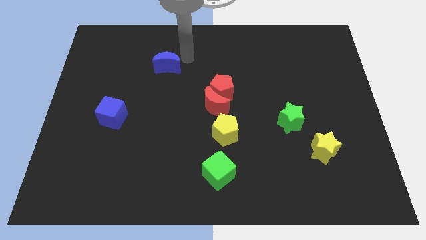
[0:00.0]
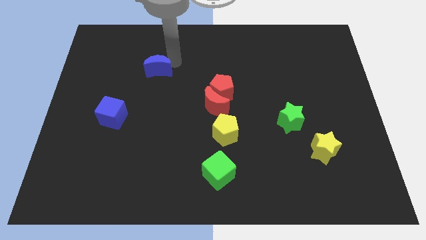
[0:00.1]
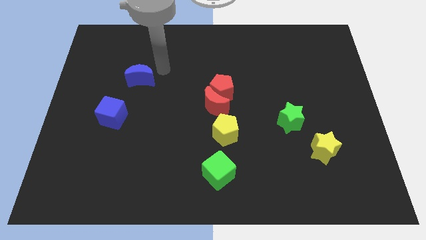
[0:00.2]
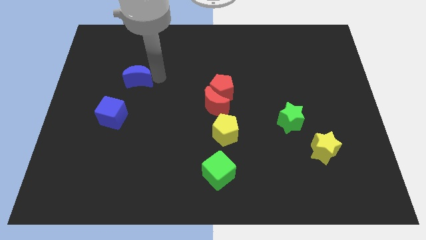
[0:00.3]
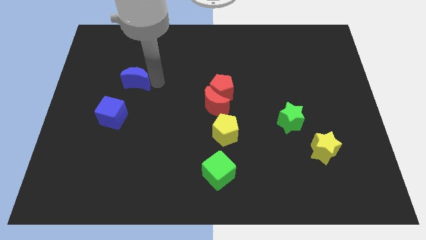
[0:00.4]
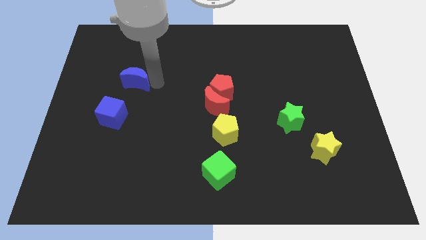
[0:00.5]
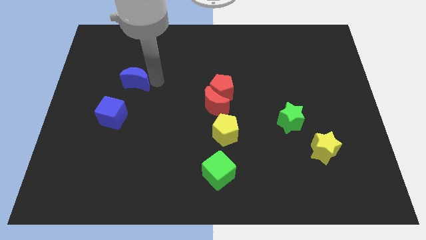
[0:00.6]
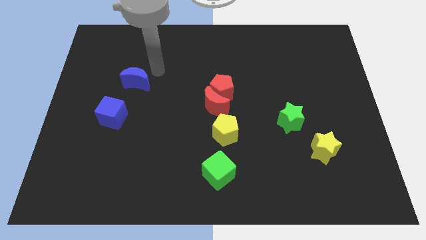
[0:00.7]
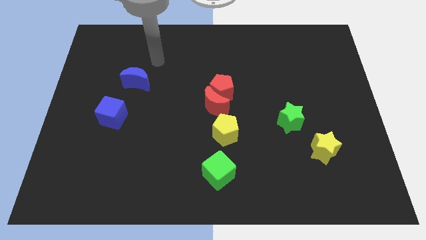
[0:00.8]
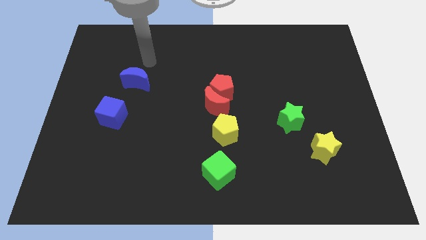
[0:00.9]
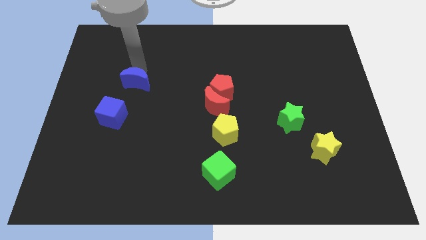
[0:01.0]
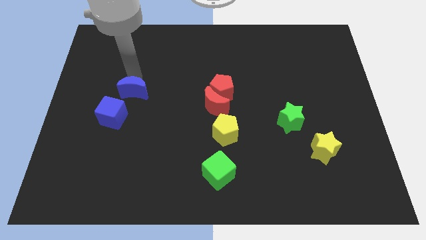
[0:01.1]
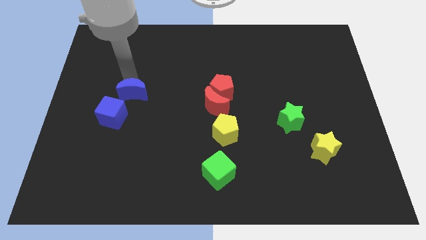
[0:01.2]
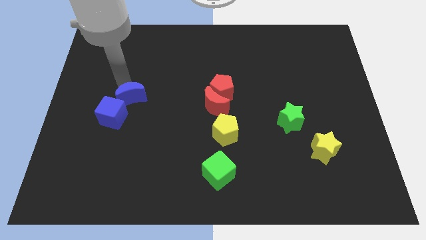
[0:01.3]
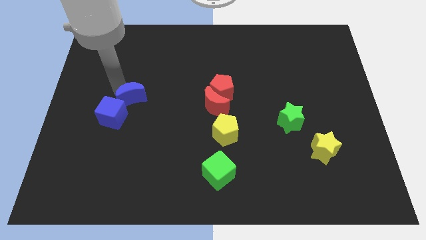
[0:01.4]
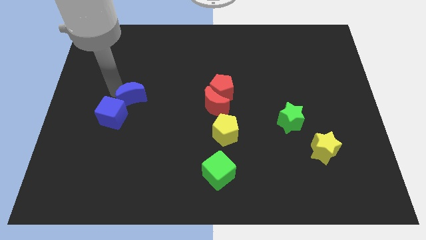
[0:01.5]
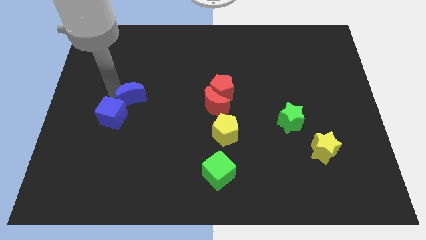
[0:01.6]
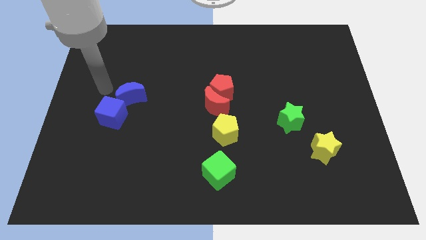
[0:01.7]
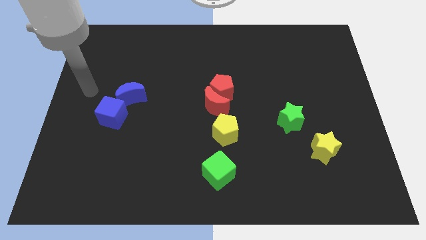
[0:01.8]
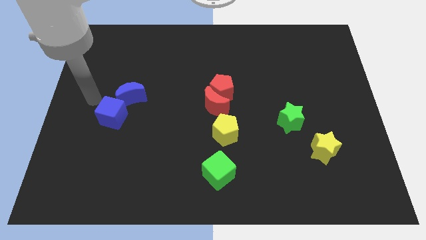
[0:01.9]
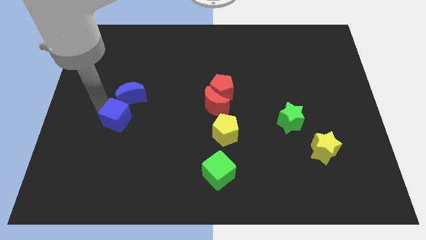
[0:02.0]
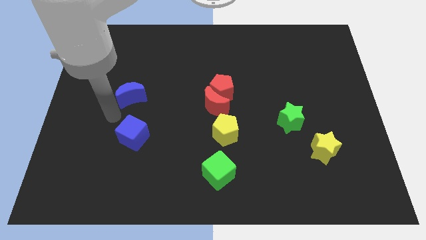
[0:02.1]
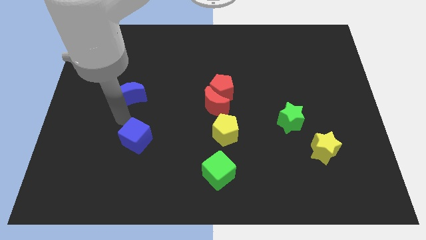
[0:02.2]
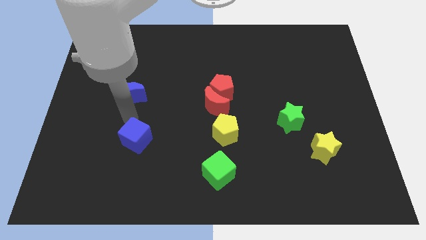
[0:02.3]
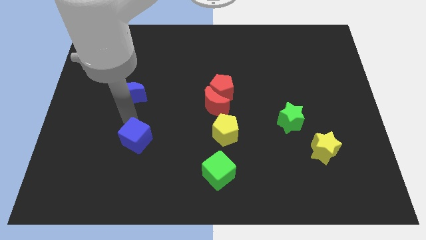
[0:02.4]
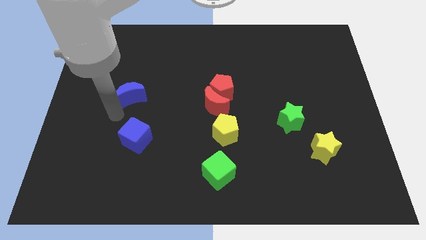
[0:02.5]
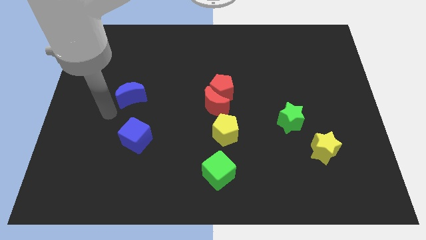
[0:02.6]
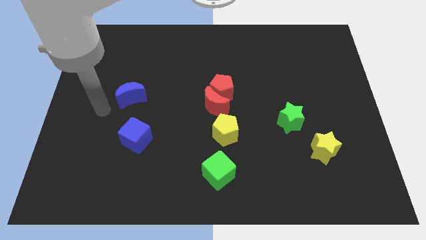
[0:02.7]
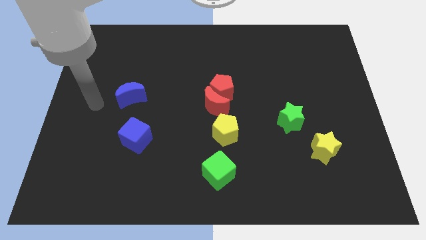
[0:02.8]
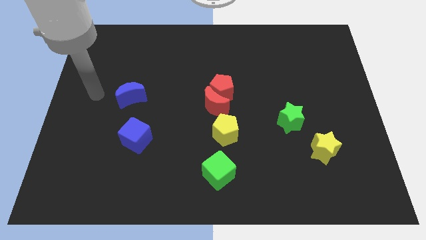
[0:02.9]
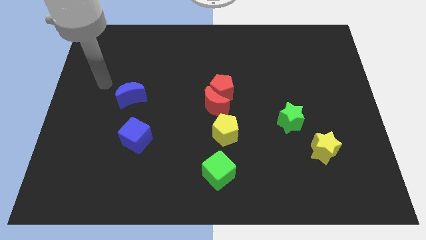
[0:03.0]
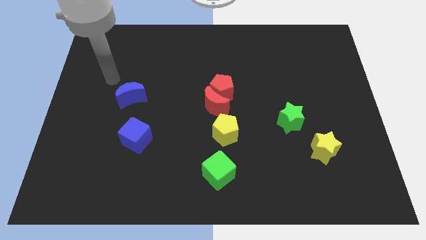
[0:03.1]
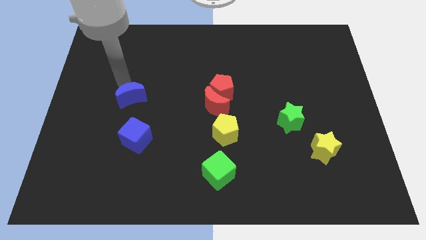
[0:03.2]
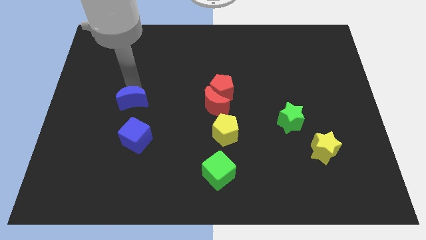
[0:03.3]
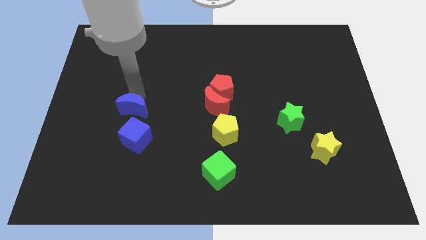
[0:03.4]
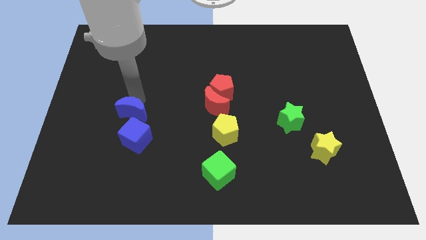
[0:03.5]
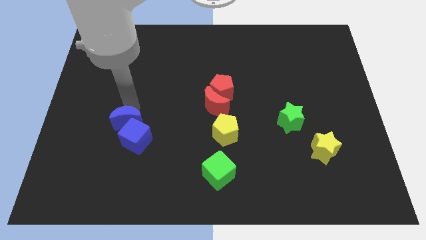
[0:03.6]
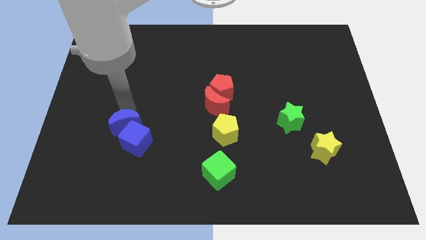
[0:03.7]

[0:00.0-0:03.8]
push the blue crescent into the blue cube

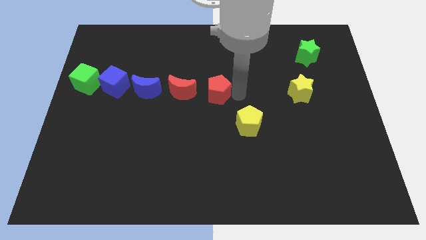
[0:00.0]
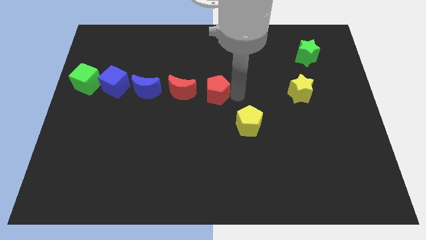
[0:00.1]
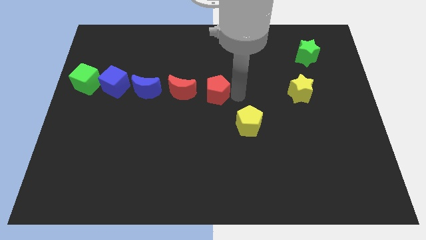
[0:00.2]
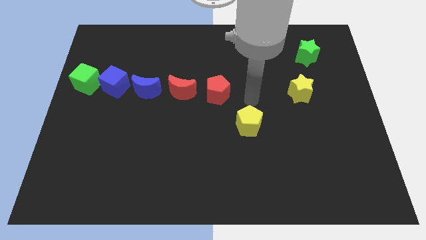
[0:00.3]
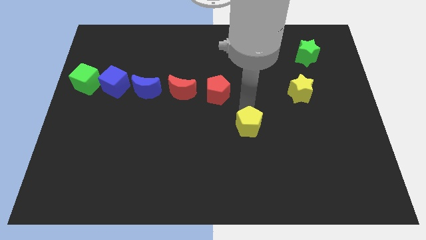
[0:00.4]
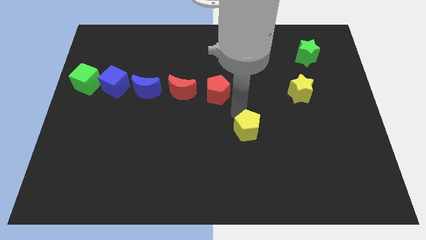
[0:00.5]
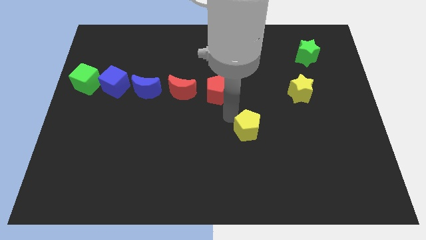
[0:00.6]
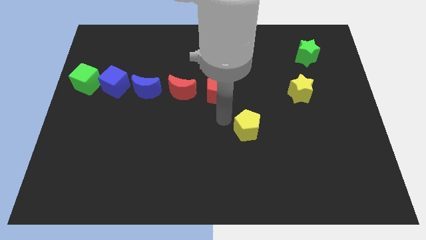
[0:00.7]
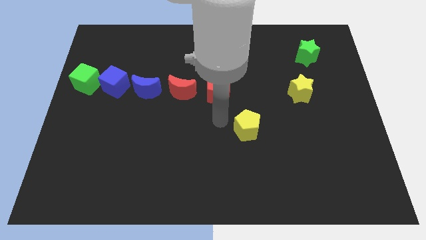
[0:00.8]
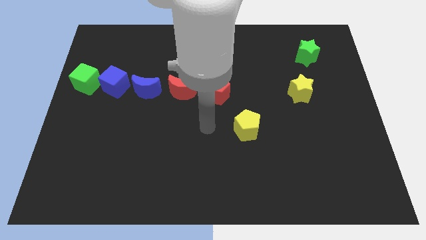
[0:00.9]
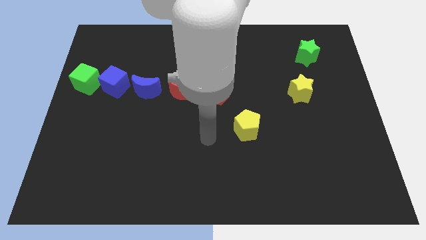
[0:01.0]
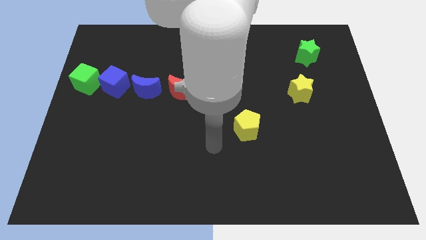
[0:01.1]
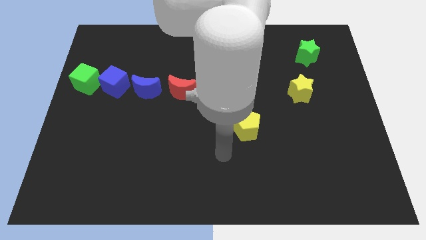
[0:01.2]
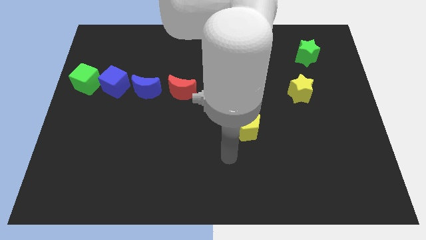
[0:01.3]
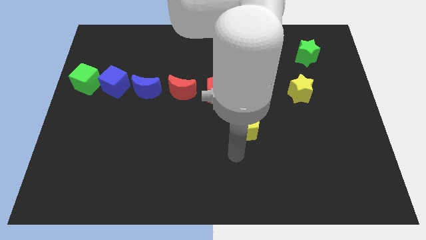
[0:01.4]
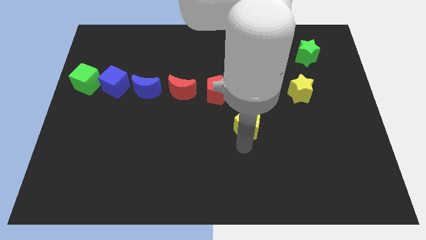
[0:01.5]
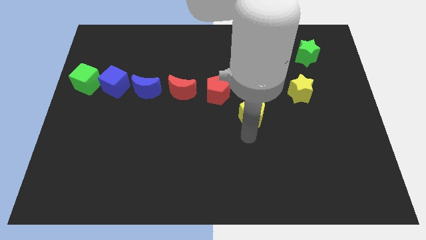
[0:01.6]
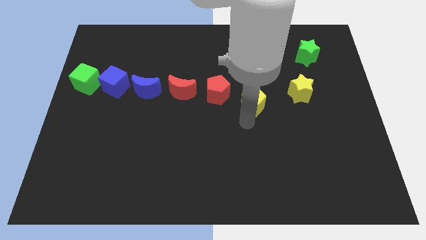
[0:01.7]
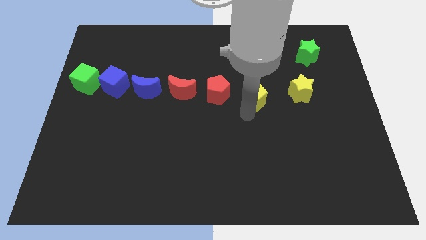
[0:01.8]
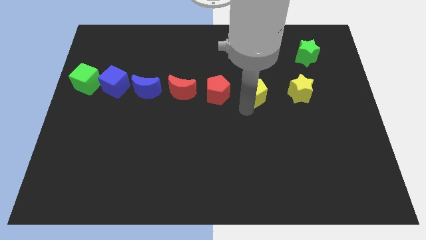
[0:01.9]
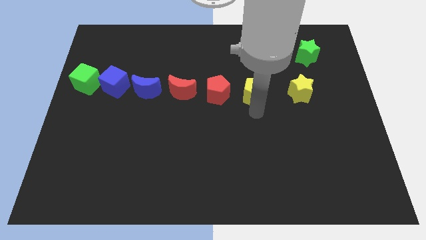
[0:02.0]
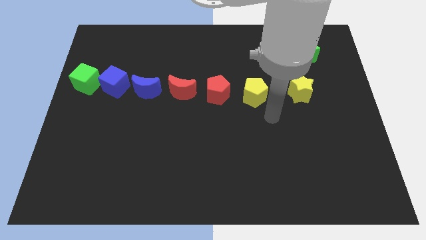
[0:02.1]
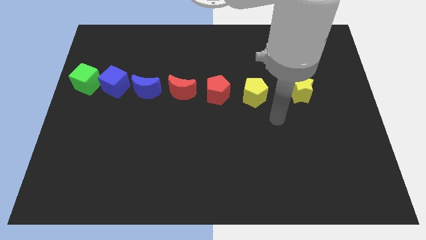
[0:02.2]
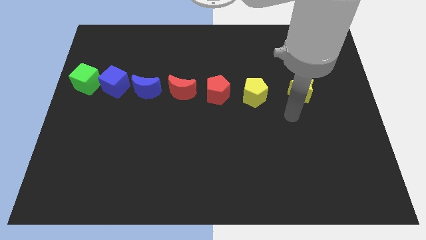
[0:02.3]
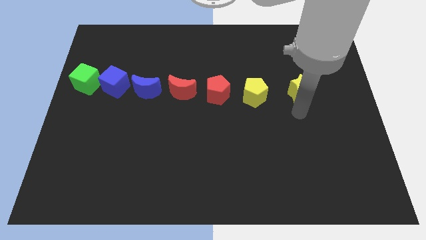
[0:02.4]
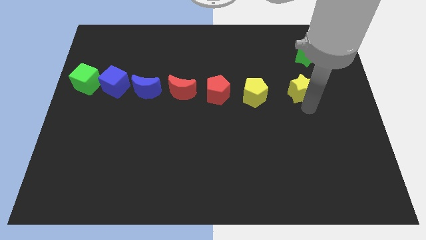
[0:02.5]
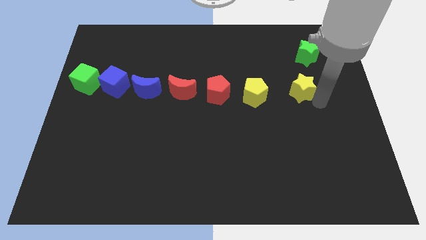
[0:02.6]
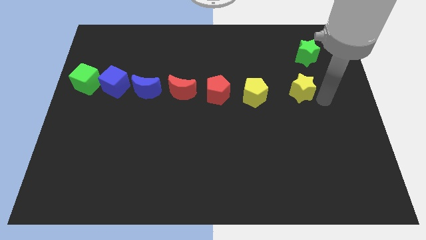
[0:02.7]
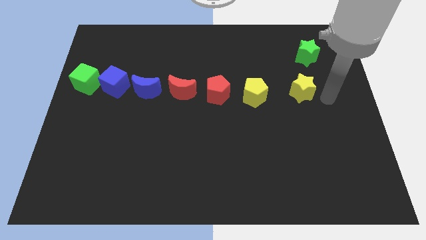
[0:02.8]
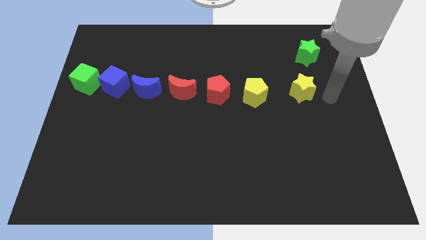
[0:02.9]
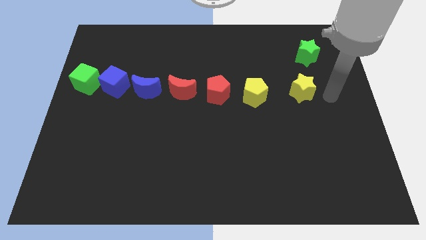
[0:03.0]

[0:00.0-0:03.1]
move the yellow pentagon in between the yellow star and red pentagon

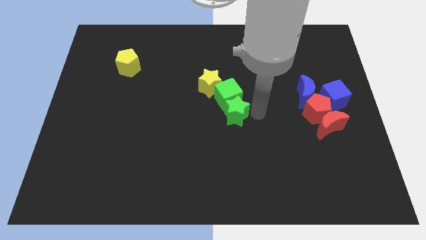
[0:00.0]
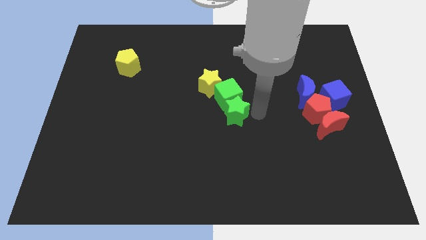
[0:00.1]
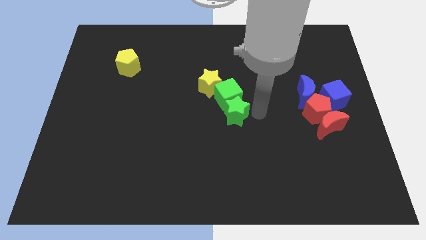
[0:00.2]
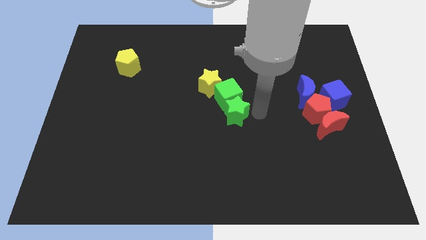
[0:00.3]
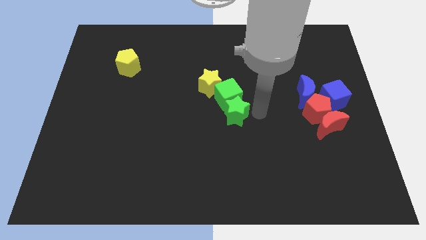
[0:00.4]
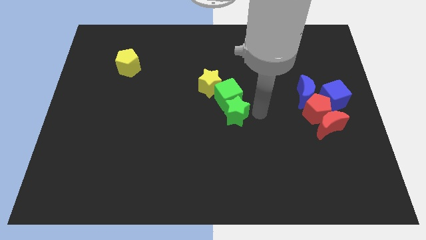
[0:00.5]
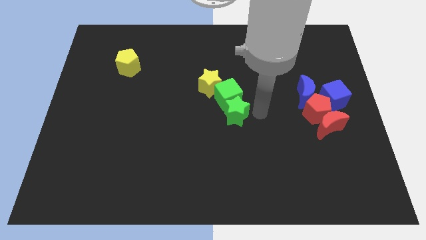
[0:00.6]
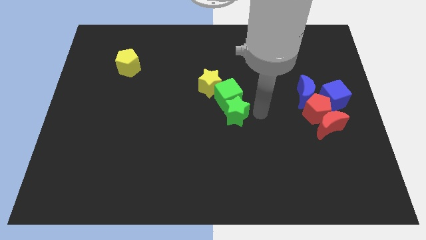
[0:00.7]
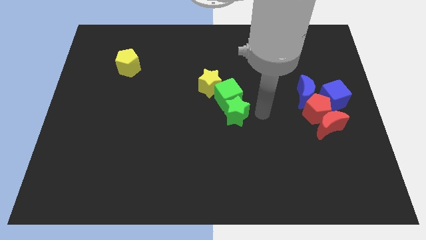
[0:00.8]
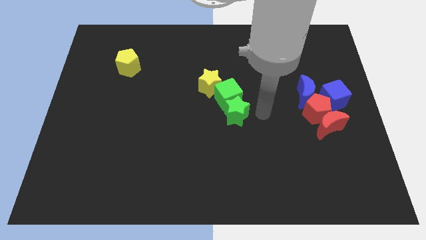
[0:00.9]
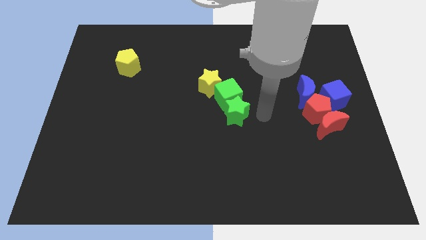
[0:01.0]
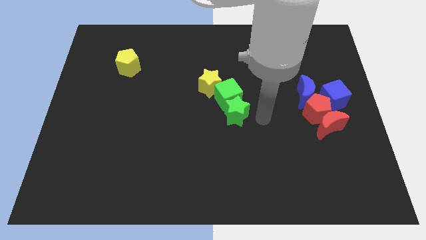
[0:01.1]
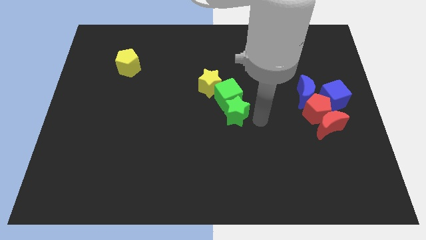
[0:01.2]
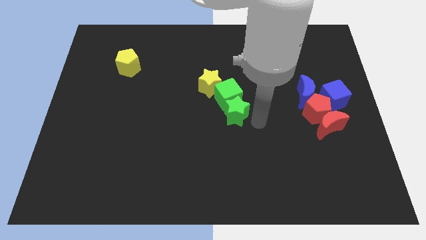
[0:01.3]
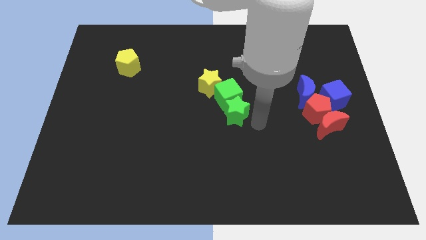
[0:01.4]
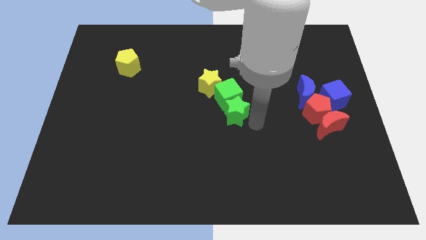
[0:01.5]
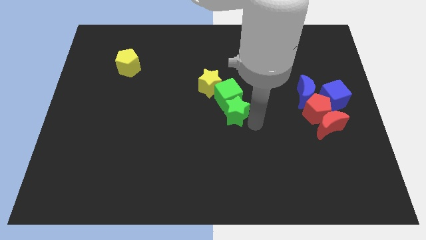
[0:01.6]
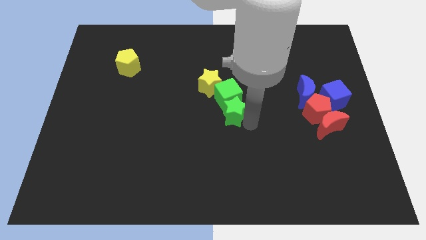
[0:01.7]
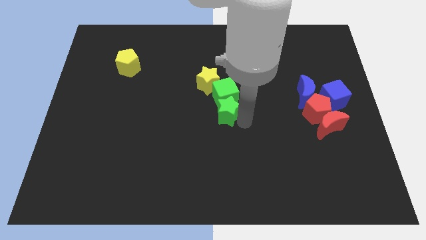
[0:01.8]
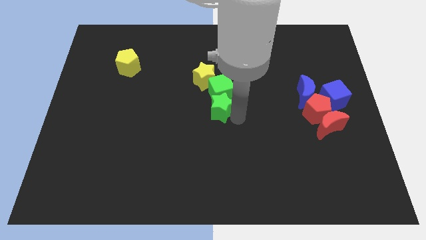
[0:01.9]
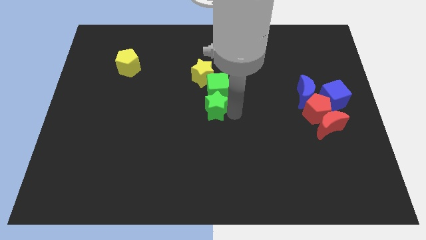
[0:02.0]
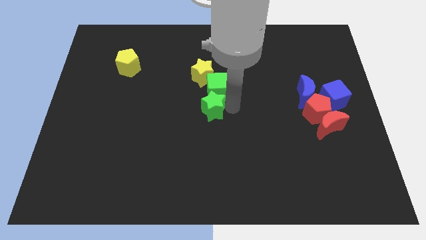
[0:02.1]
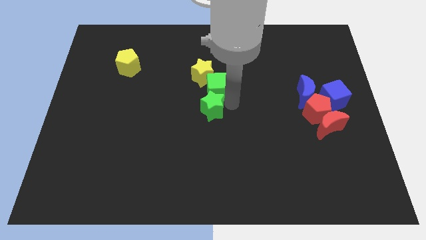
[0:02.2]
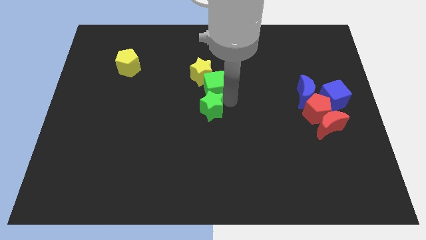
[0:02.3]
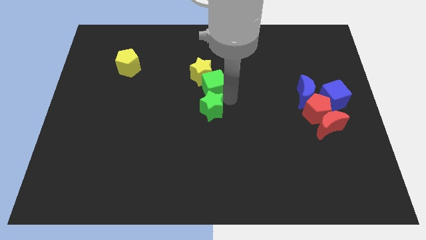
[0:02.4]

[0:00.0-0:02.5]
push green blocks towards left
